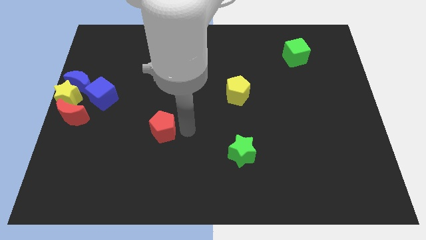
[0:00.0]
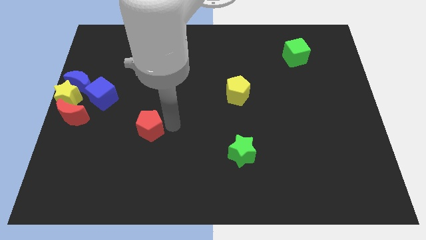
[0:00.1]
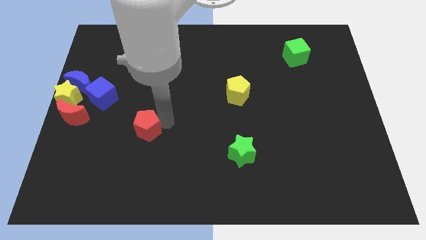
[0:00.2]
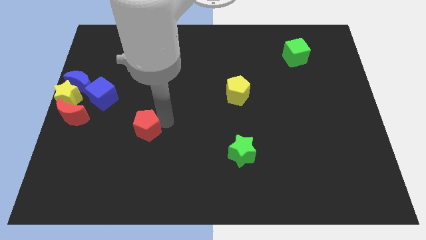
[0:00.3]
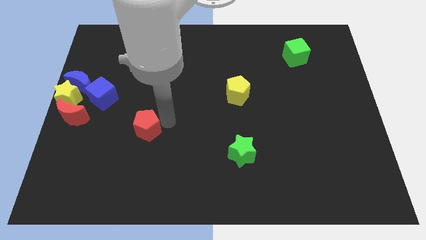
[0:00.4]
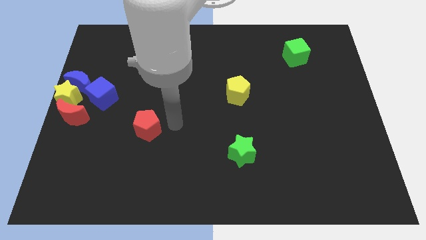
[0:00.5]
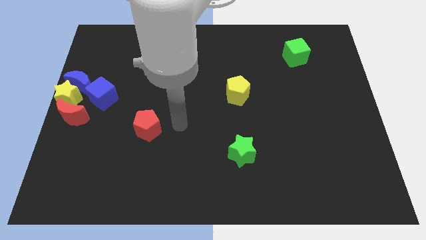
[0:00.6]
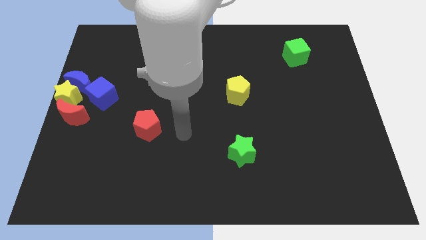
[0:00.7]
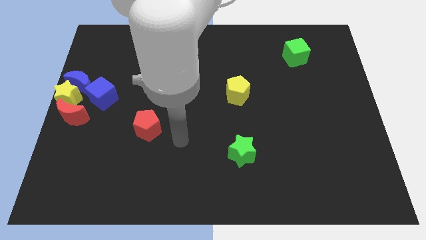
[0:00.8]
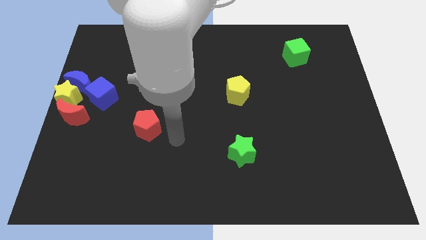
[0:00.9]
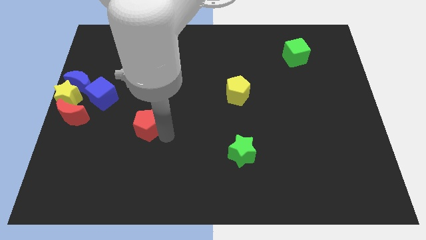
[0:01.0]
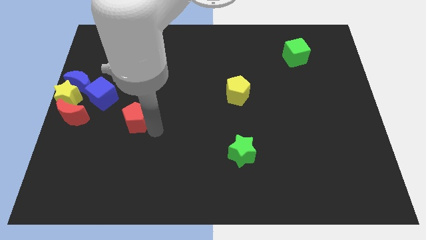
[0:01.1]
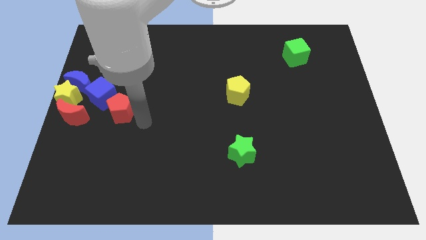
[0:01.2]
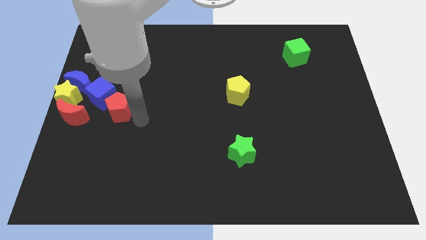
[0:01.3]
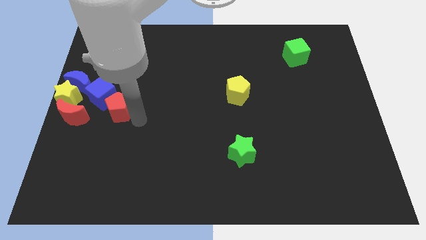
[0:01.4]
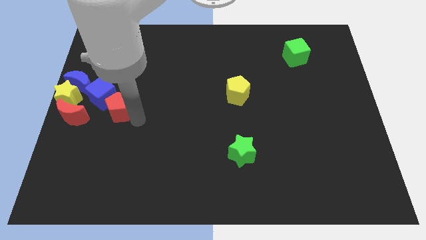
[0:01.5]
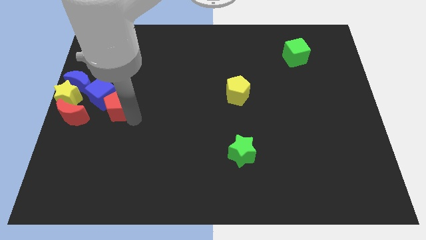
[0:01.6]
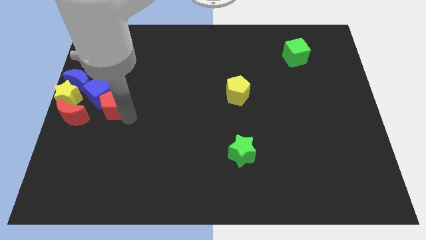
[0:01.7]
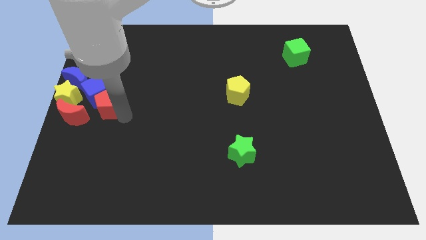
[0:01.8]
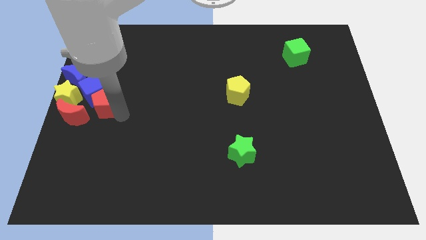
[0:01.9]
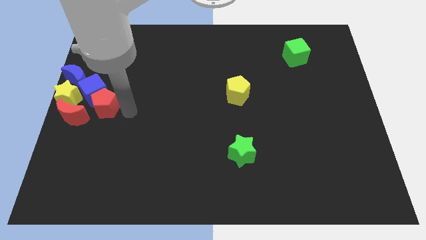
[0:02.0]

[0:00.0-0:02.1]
move the red pentagon into group of blocks

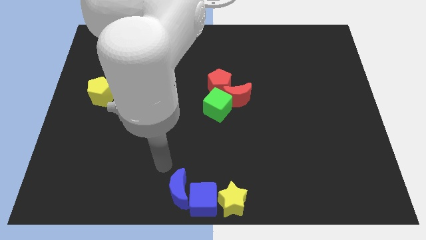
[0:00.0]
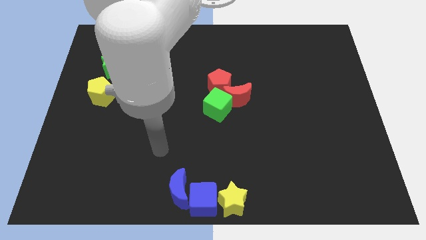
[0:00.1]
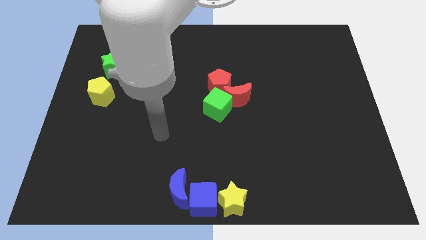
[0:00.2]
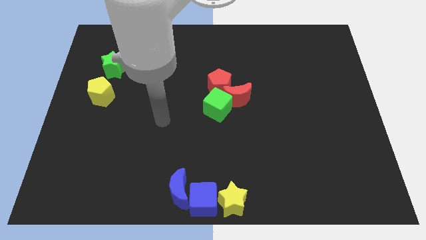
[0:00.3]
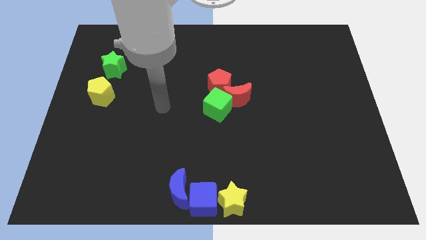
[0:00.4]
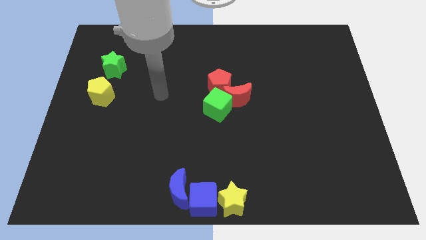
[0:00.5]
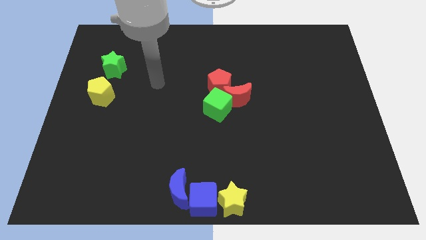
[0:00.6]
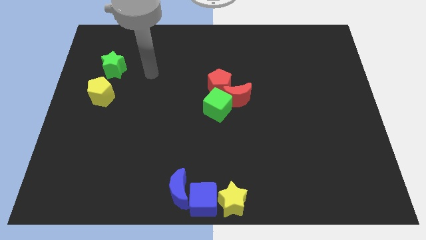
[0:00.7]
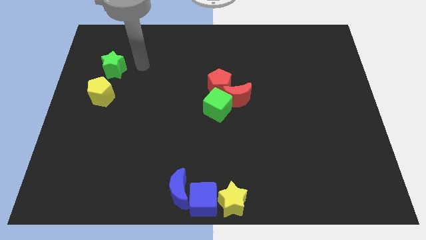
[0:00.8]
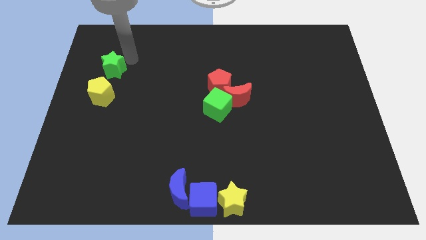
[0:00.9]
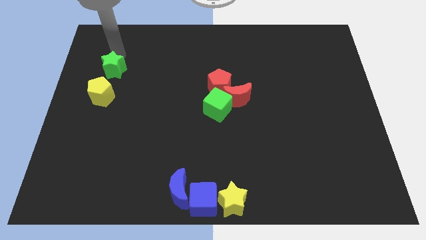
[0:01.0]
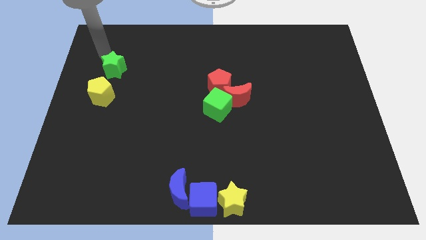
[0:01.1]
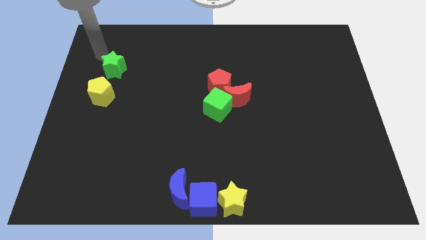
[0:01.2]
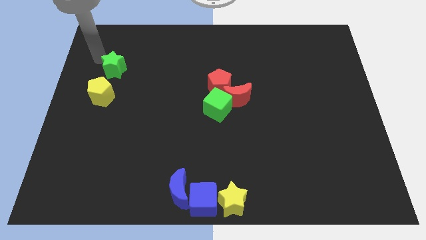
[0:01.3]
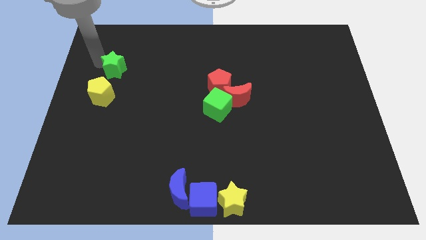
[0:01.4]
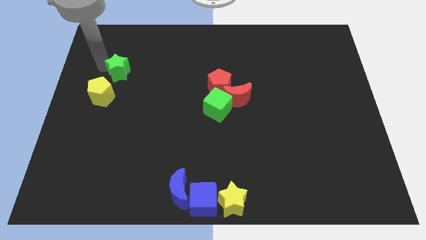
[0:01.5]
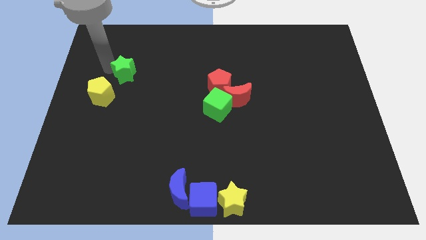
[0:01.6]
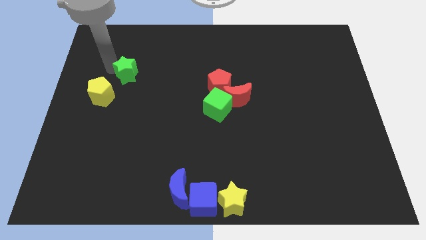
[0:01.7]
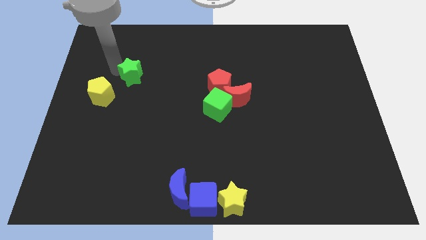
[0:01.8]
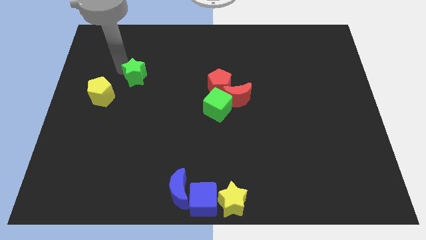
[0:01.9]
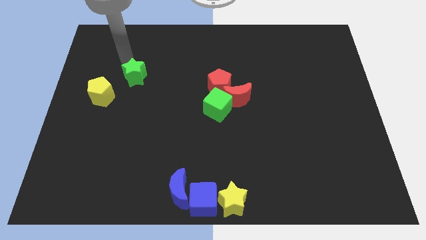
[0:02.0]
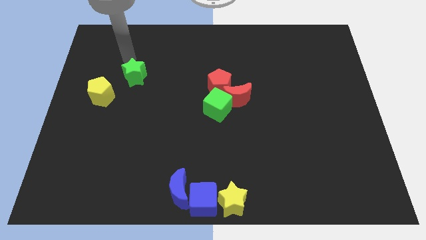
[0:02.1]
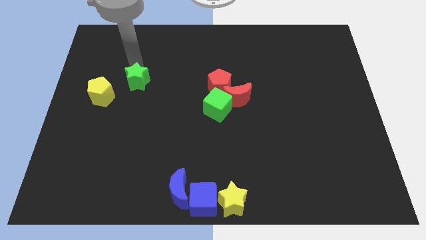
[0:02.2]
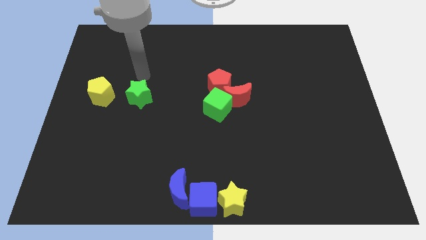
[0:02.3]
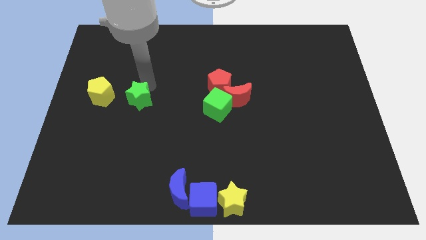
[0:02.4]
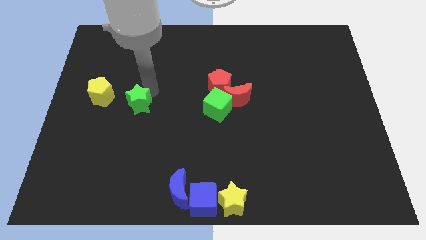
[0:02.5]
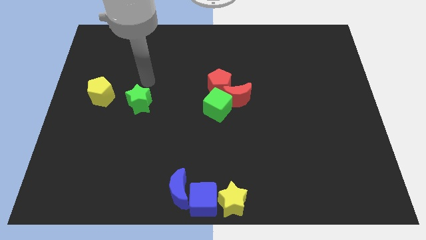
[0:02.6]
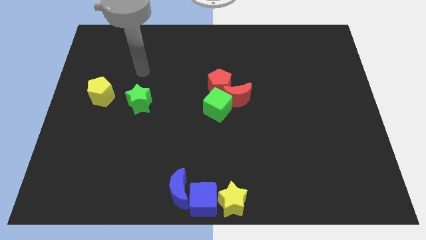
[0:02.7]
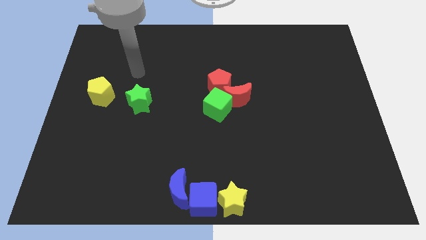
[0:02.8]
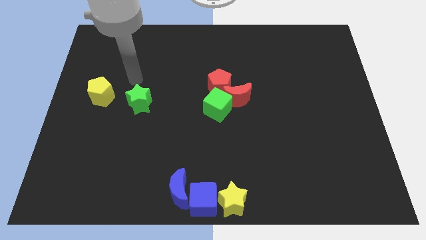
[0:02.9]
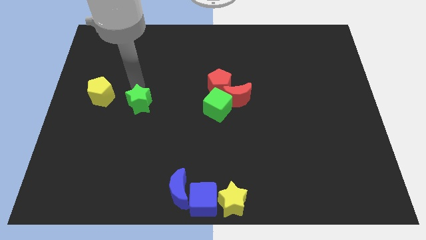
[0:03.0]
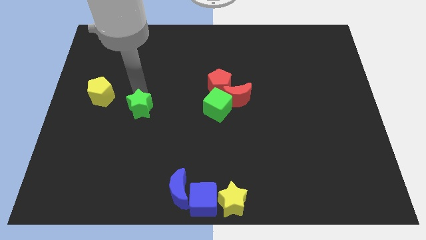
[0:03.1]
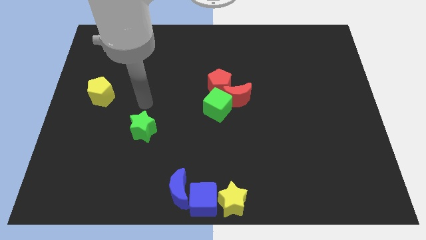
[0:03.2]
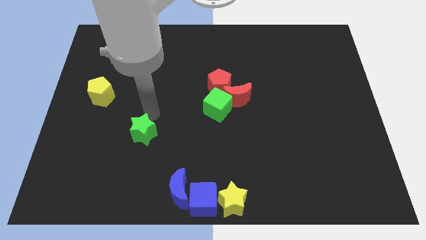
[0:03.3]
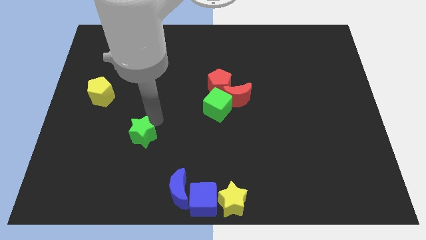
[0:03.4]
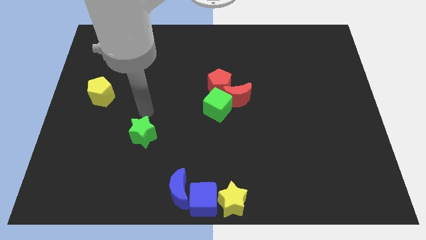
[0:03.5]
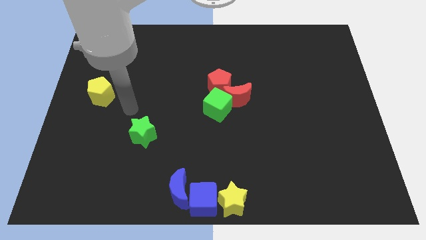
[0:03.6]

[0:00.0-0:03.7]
push the green star towards down

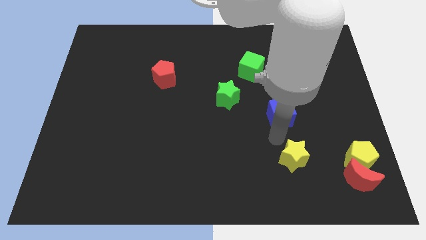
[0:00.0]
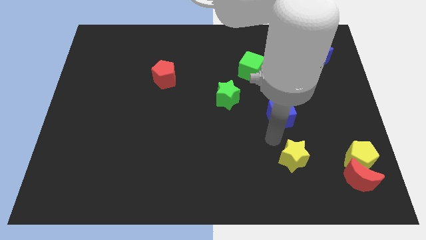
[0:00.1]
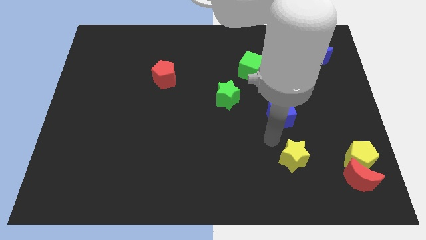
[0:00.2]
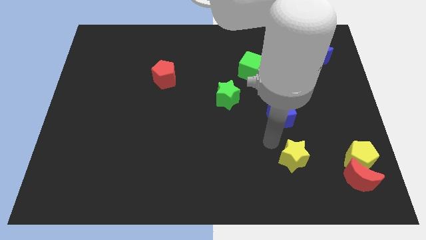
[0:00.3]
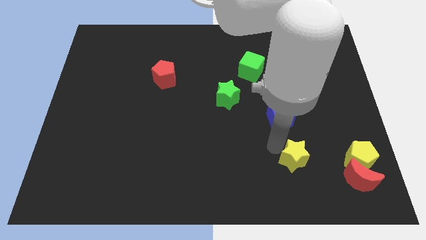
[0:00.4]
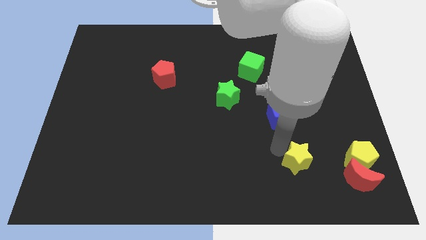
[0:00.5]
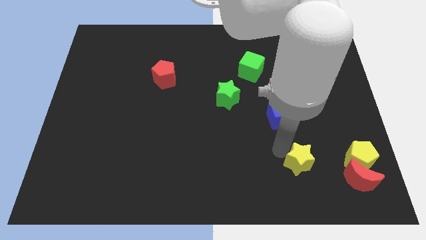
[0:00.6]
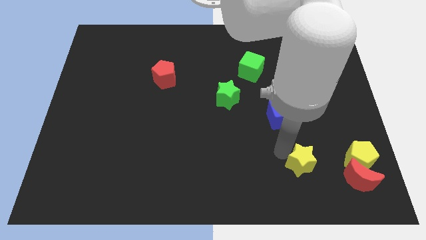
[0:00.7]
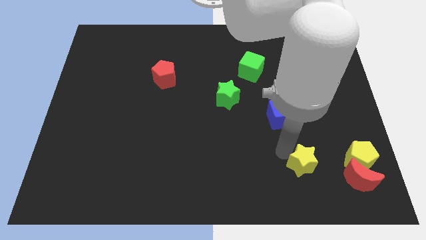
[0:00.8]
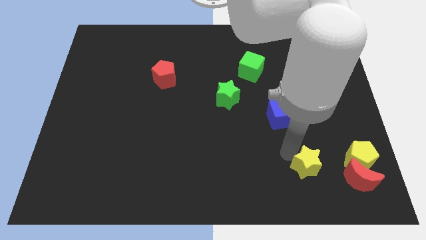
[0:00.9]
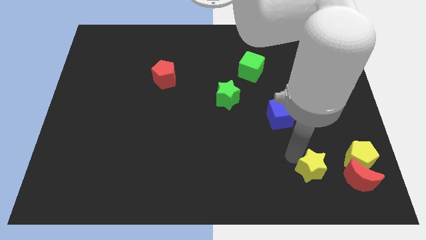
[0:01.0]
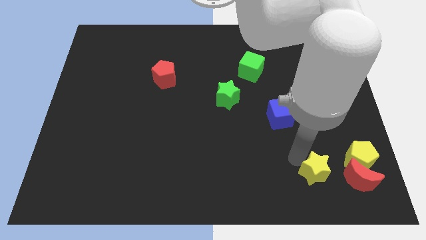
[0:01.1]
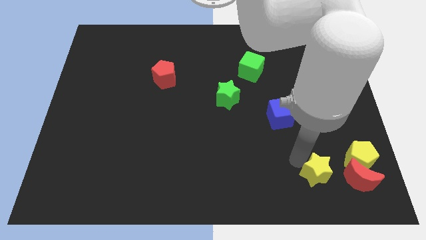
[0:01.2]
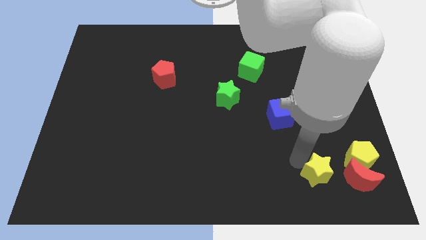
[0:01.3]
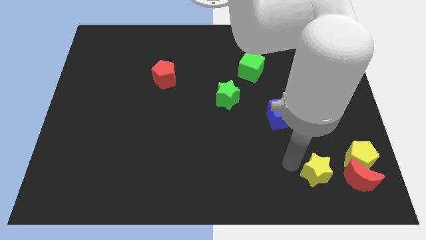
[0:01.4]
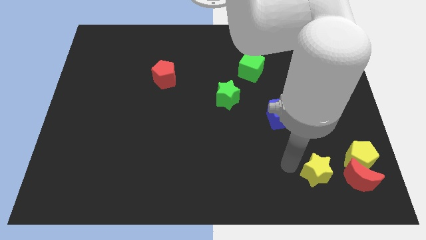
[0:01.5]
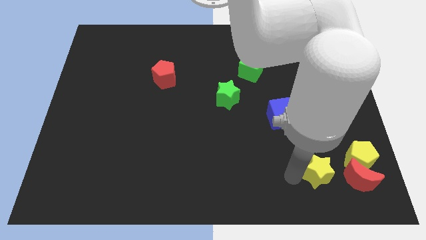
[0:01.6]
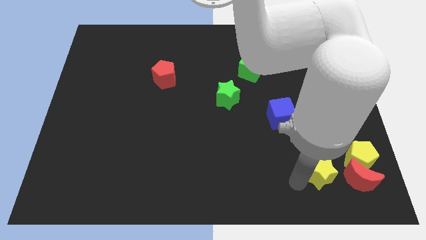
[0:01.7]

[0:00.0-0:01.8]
push the yellow star to the left of the red moon

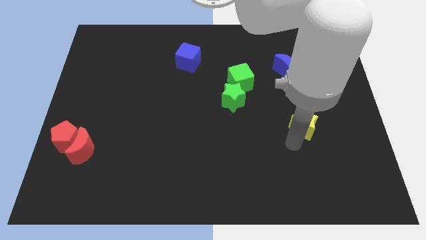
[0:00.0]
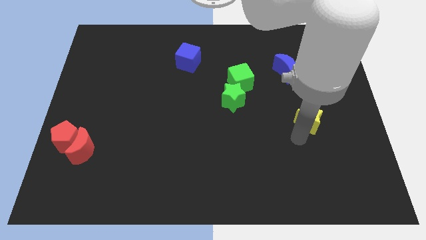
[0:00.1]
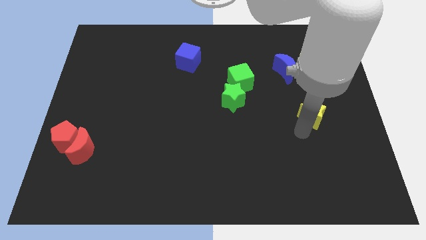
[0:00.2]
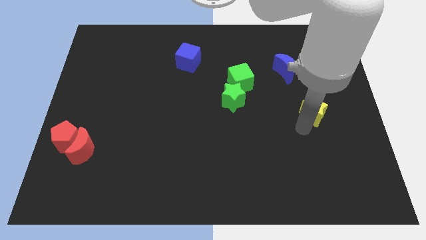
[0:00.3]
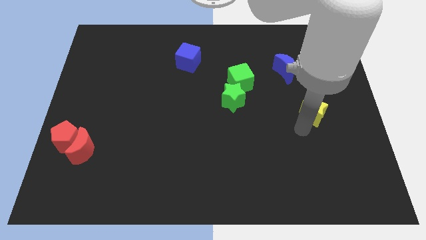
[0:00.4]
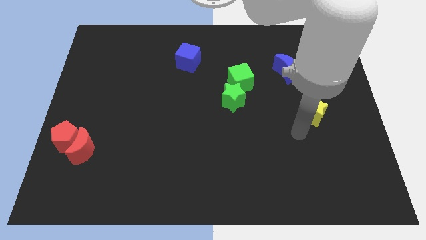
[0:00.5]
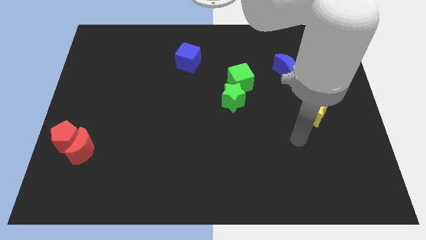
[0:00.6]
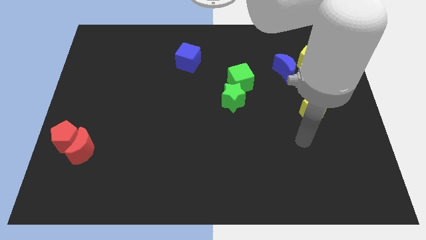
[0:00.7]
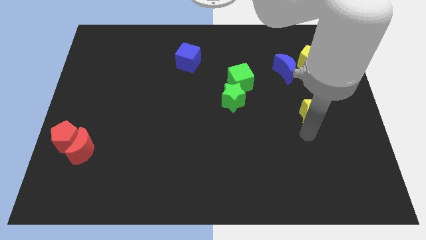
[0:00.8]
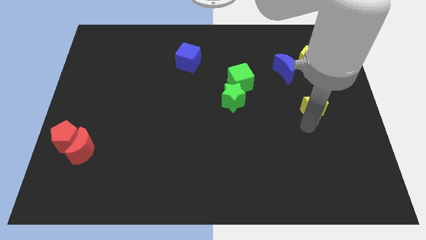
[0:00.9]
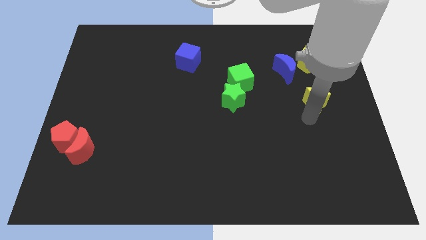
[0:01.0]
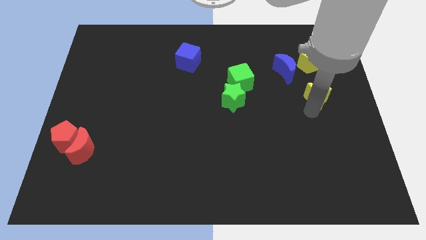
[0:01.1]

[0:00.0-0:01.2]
move the yellow star slightly towards the top of the board
